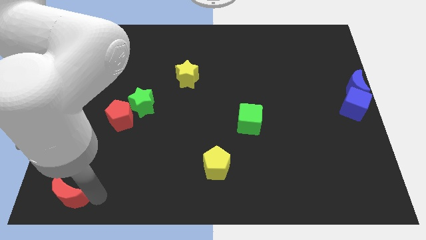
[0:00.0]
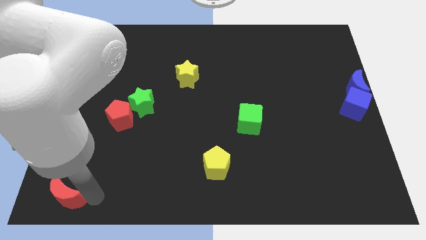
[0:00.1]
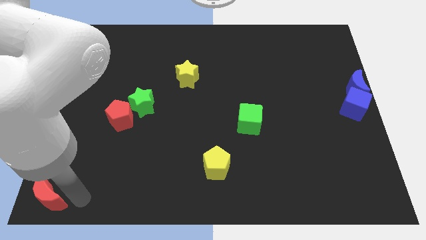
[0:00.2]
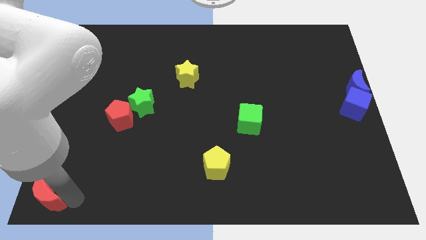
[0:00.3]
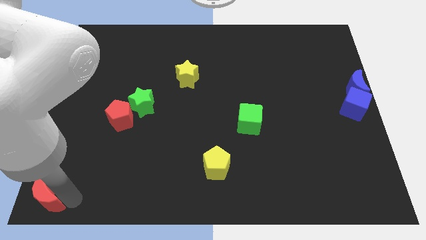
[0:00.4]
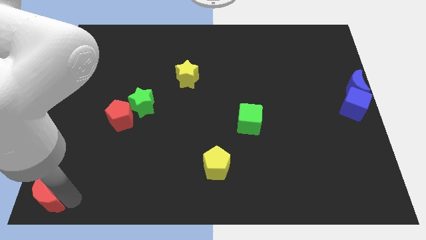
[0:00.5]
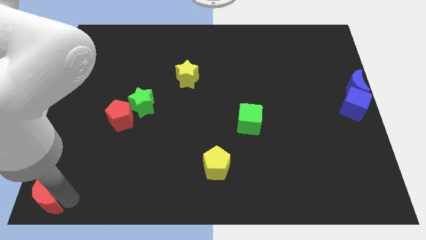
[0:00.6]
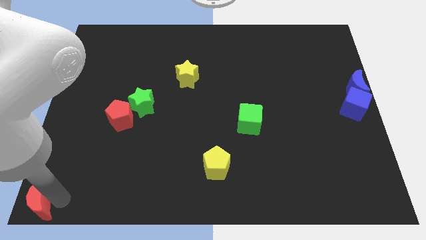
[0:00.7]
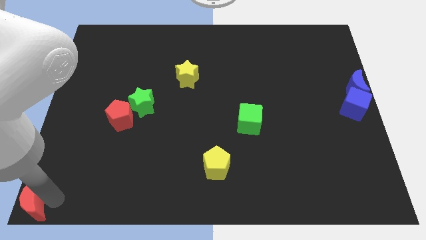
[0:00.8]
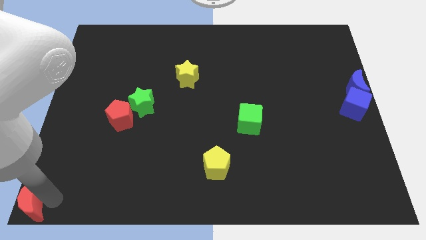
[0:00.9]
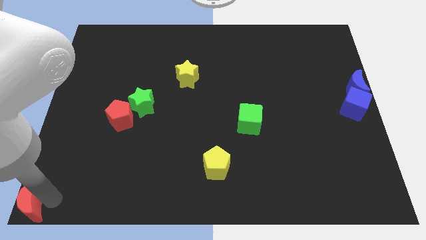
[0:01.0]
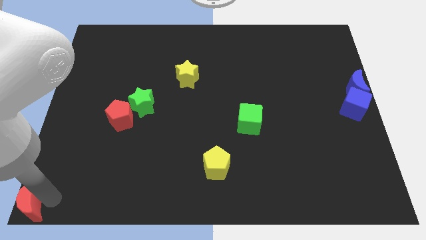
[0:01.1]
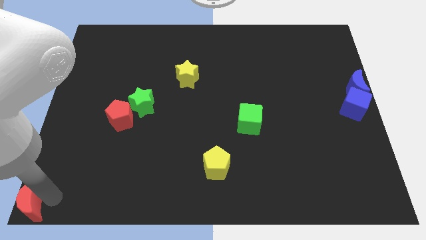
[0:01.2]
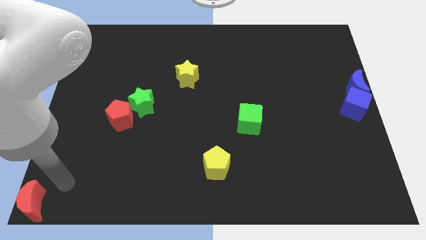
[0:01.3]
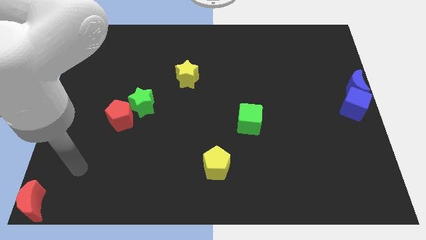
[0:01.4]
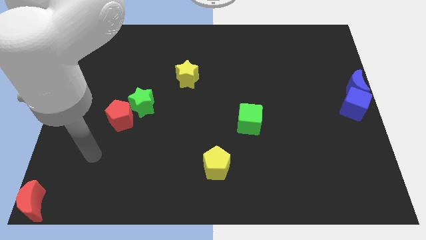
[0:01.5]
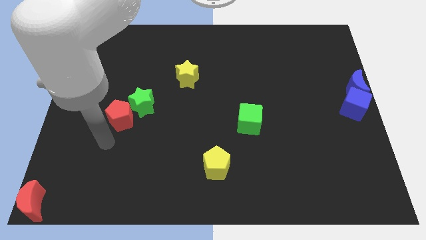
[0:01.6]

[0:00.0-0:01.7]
place the red crescent at the bottom left corner of the board

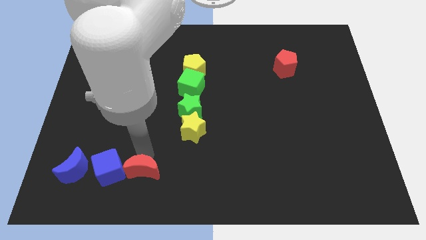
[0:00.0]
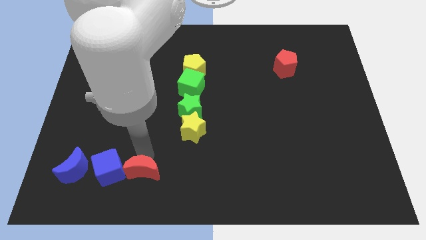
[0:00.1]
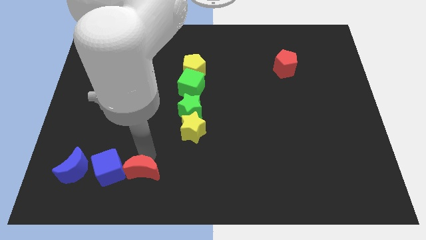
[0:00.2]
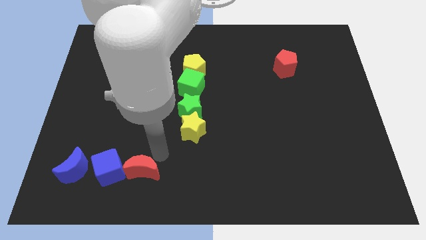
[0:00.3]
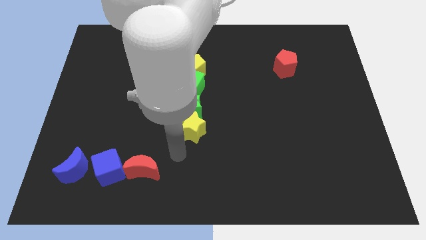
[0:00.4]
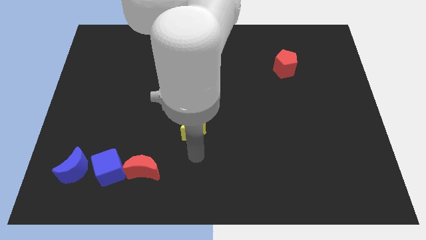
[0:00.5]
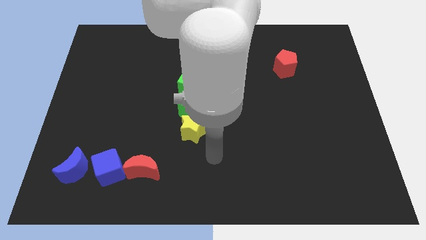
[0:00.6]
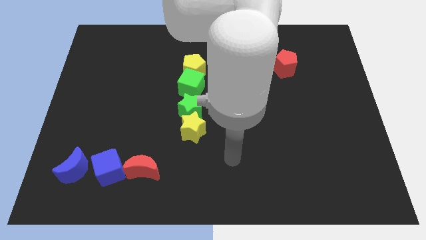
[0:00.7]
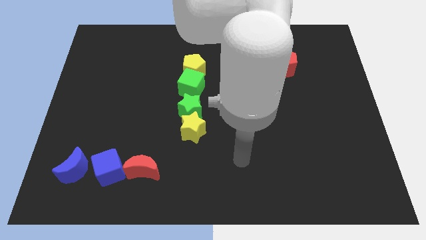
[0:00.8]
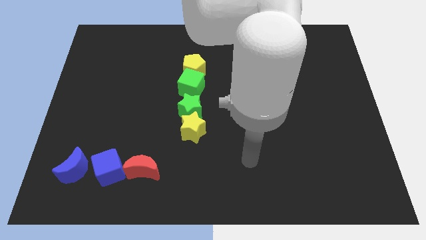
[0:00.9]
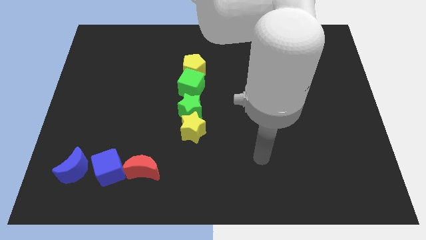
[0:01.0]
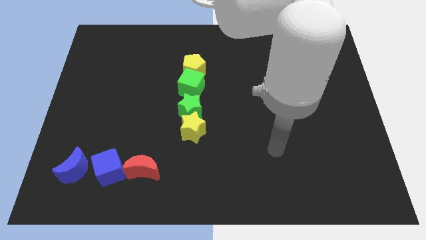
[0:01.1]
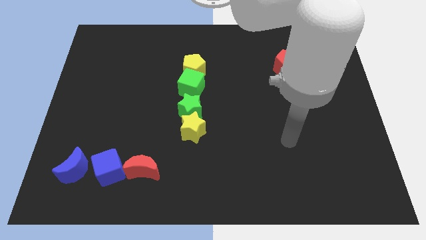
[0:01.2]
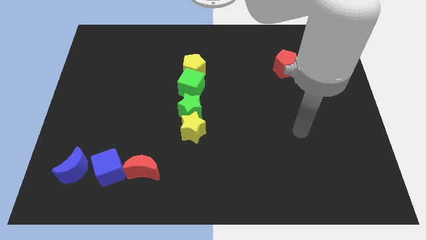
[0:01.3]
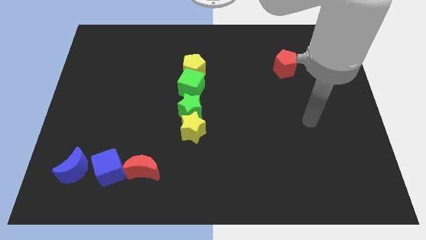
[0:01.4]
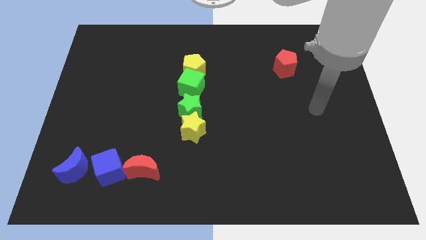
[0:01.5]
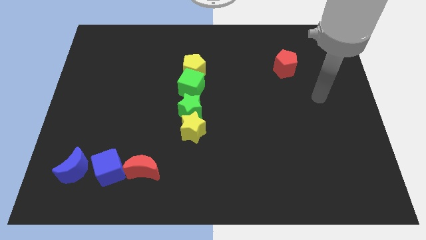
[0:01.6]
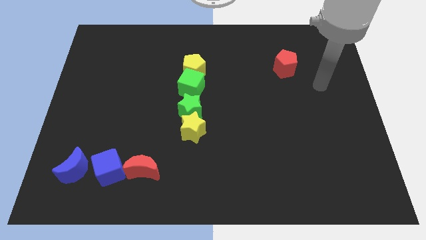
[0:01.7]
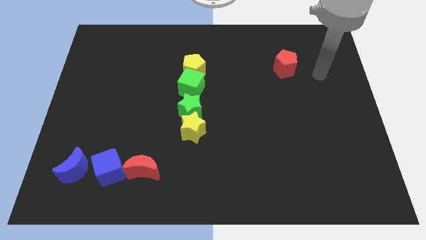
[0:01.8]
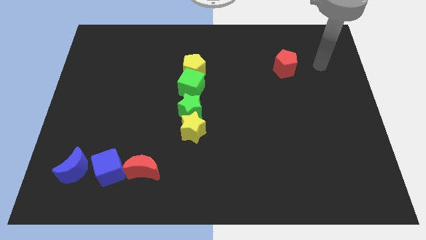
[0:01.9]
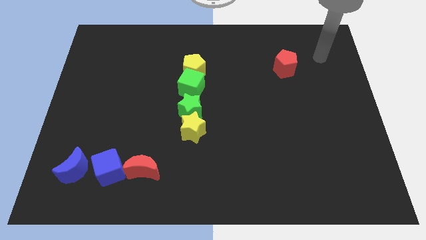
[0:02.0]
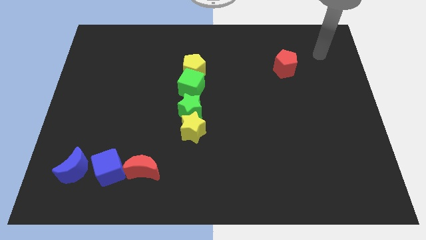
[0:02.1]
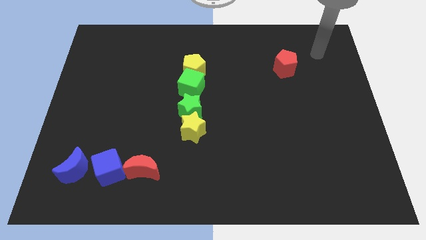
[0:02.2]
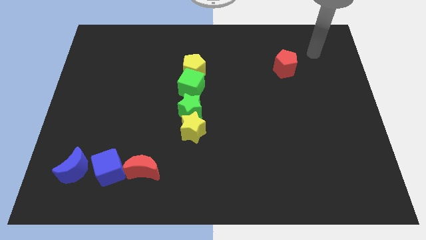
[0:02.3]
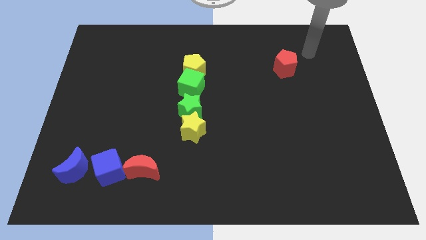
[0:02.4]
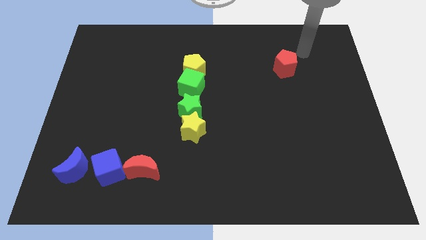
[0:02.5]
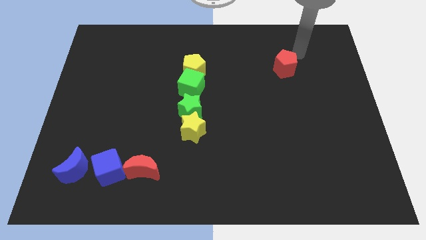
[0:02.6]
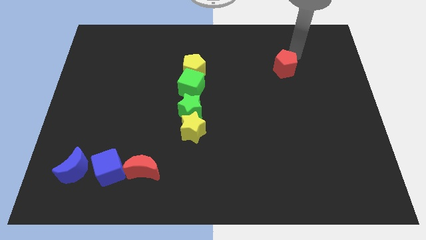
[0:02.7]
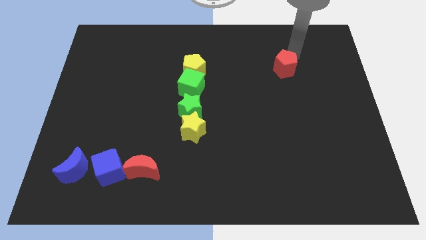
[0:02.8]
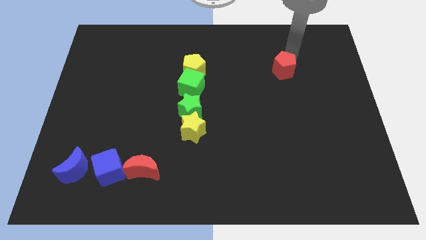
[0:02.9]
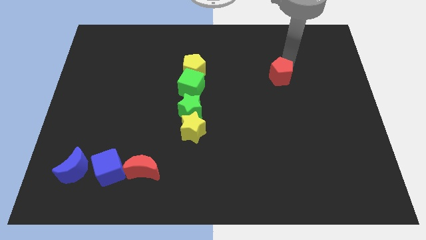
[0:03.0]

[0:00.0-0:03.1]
point your arm towards the top side of the red pentagon

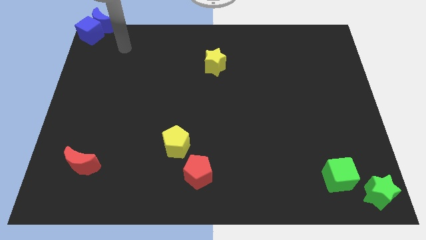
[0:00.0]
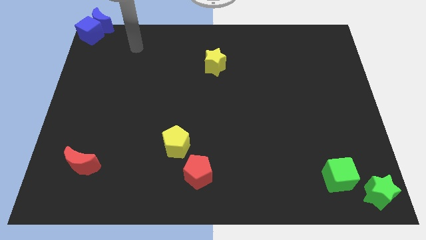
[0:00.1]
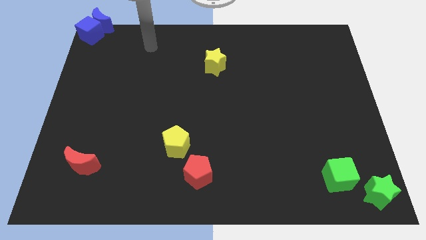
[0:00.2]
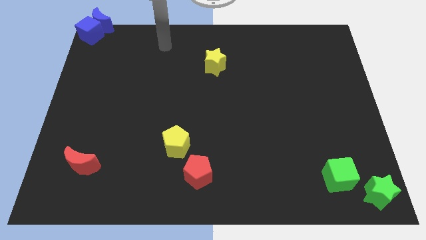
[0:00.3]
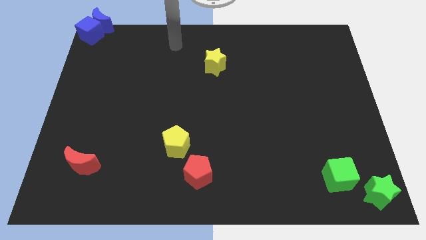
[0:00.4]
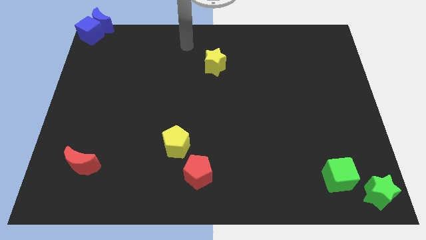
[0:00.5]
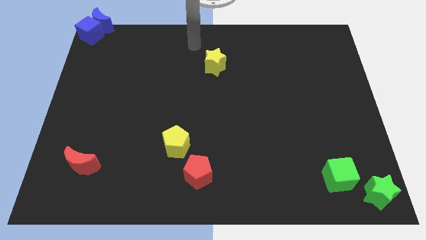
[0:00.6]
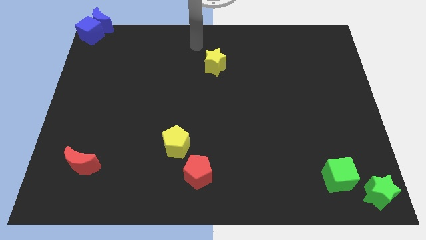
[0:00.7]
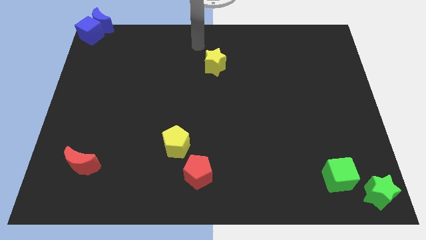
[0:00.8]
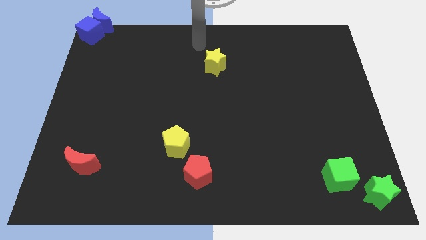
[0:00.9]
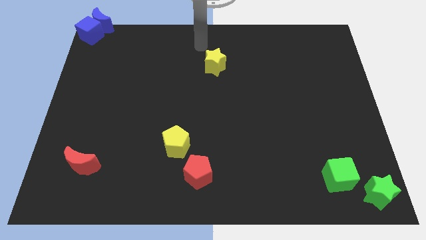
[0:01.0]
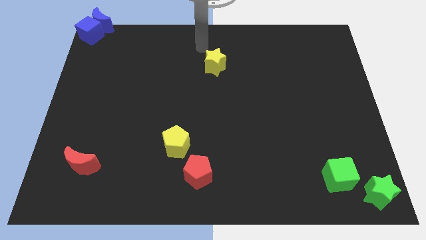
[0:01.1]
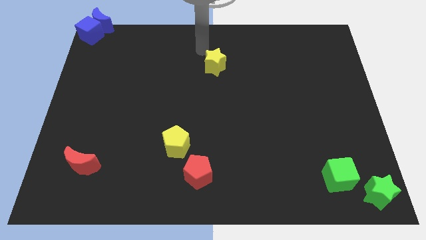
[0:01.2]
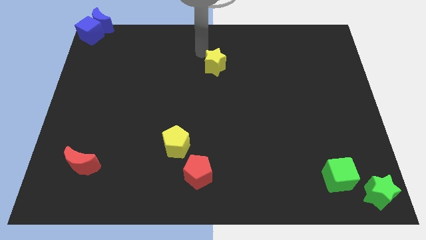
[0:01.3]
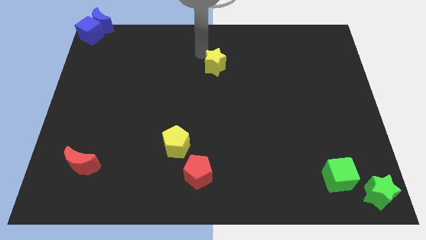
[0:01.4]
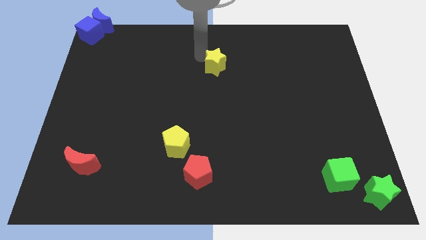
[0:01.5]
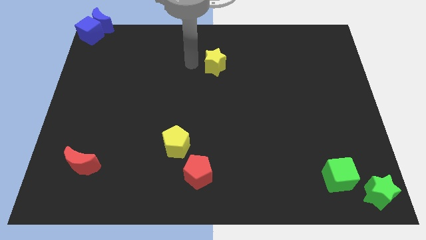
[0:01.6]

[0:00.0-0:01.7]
move your arm towards the left of the yellow star at top center of the board

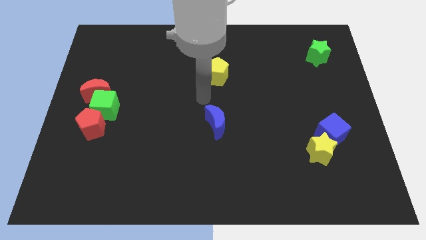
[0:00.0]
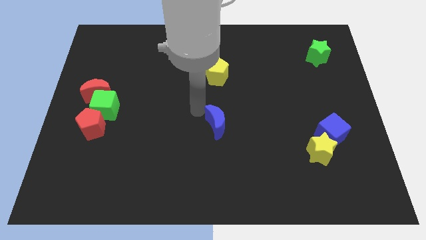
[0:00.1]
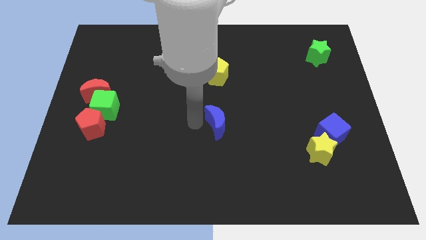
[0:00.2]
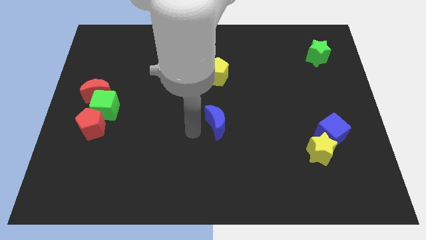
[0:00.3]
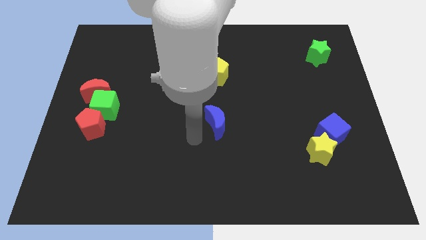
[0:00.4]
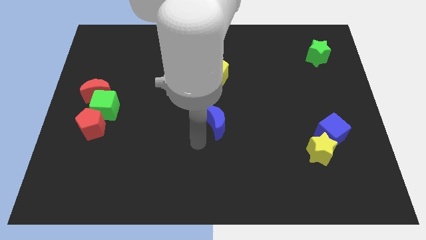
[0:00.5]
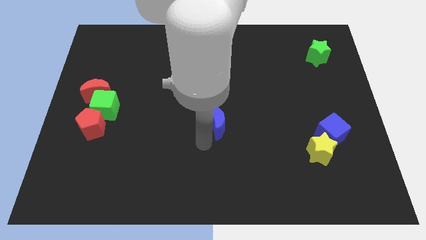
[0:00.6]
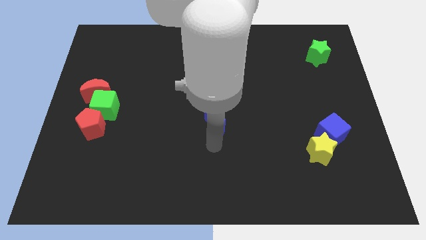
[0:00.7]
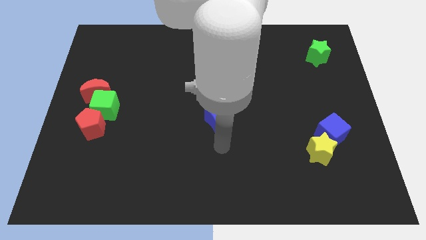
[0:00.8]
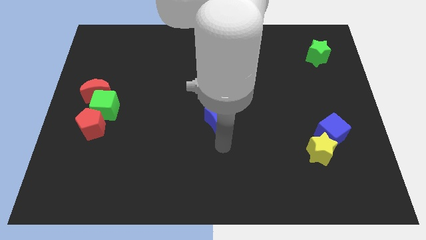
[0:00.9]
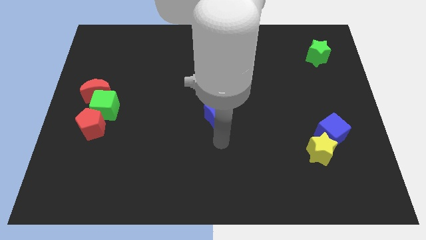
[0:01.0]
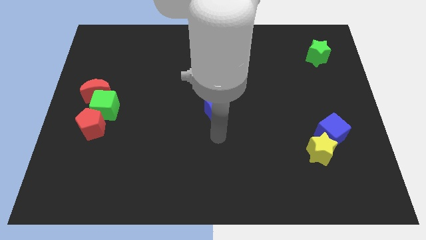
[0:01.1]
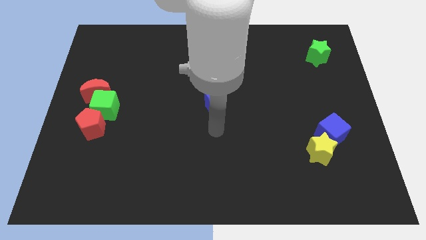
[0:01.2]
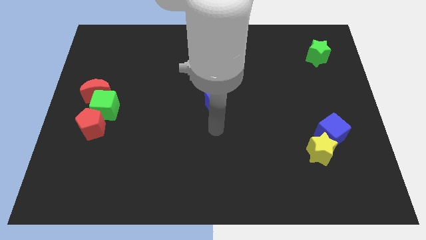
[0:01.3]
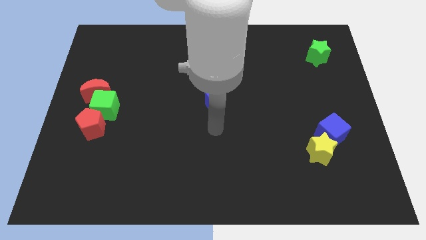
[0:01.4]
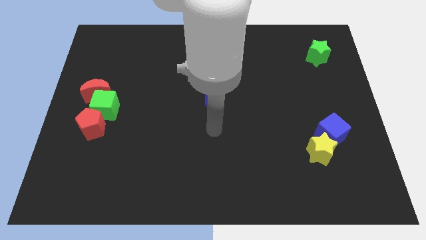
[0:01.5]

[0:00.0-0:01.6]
move the blue crescent to the right of the green cube

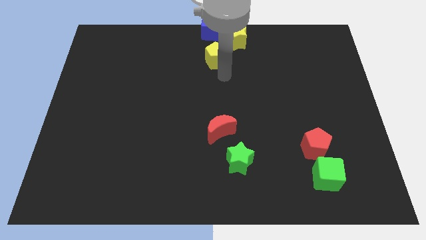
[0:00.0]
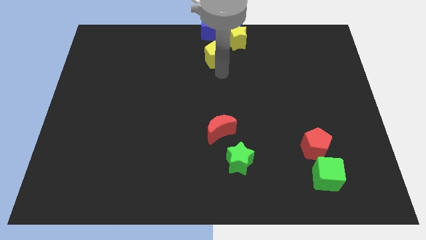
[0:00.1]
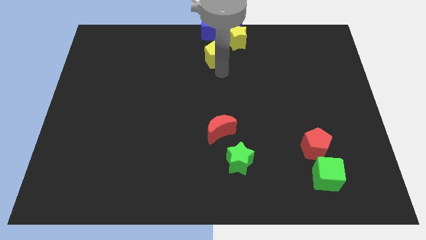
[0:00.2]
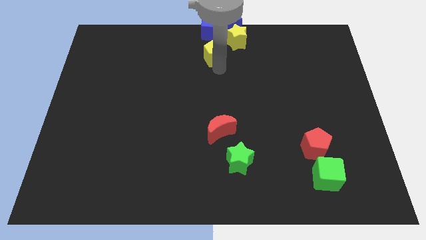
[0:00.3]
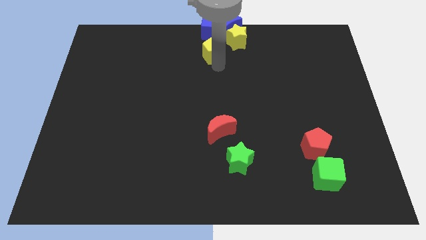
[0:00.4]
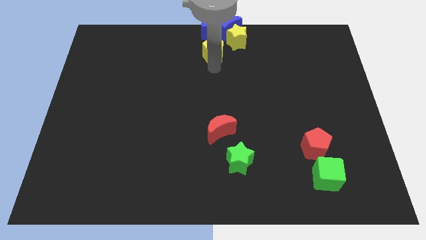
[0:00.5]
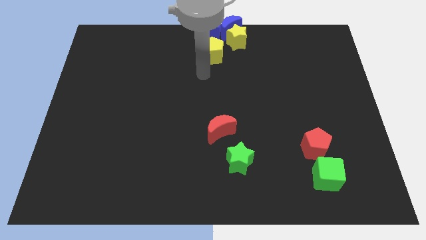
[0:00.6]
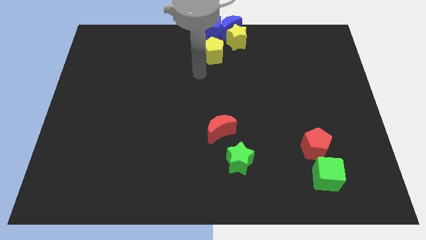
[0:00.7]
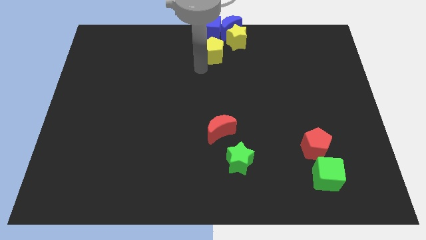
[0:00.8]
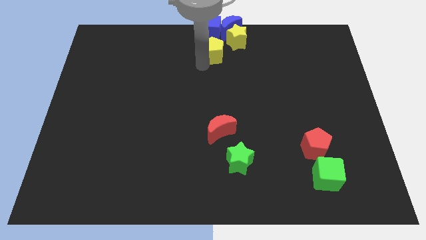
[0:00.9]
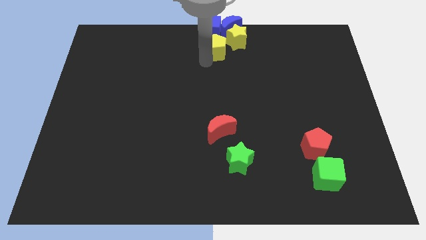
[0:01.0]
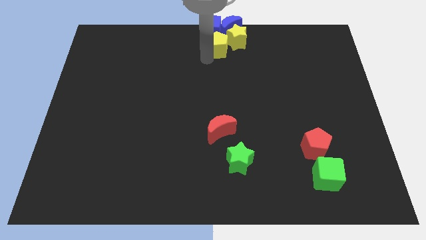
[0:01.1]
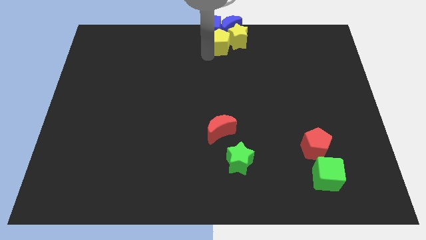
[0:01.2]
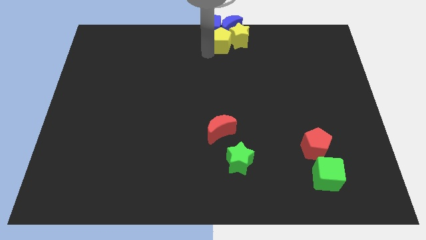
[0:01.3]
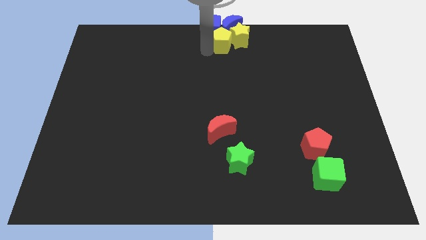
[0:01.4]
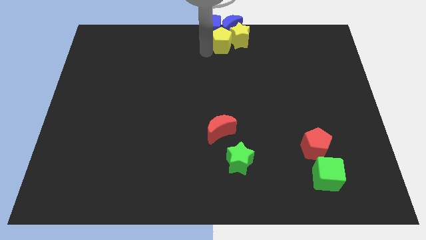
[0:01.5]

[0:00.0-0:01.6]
push the yellow pentagon into the left of the yellow star
